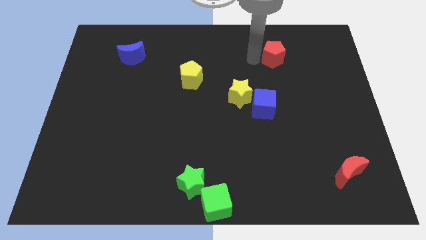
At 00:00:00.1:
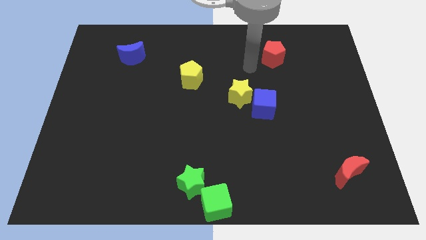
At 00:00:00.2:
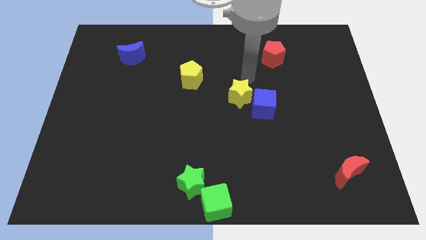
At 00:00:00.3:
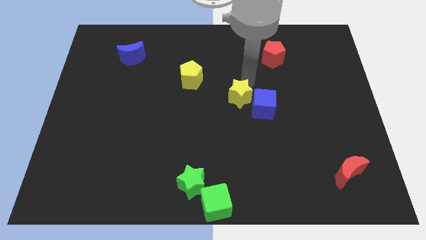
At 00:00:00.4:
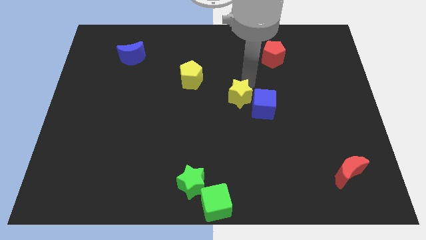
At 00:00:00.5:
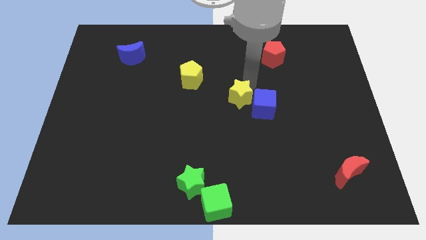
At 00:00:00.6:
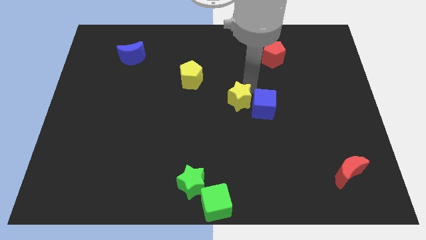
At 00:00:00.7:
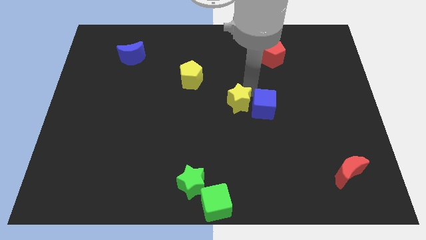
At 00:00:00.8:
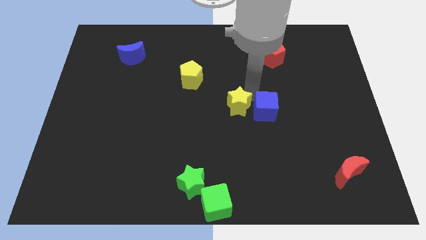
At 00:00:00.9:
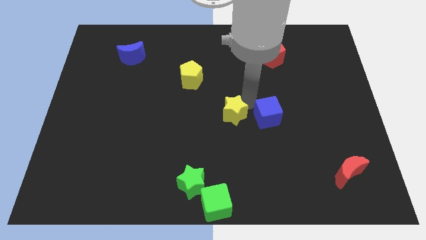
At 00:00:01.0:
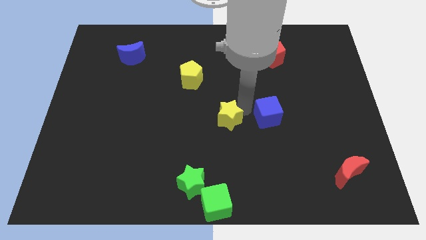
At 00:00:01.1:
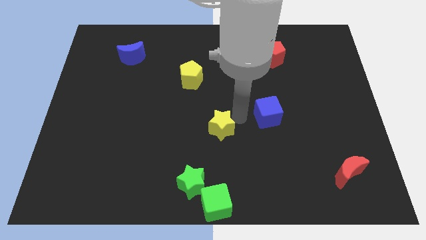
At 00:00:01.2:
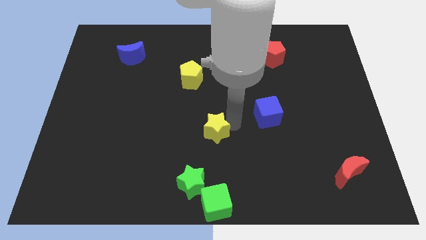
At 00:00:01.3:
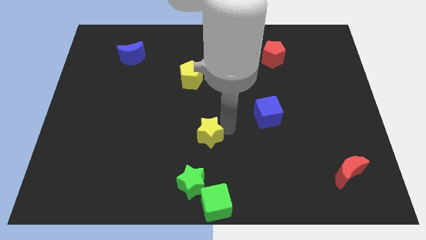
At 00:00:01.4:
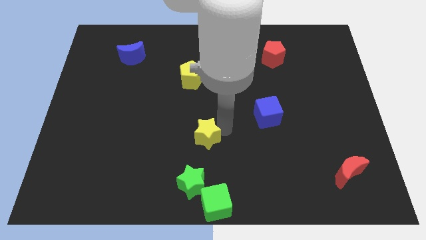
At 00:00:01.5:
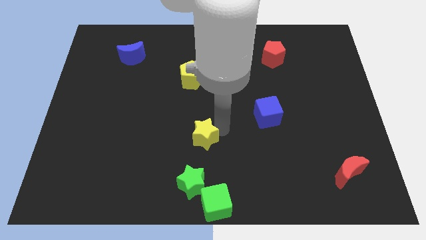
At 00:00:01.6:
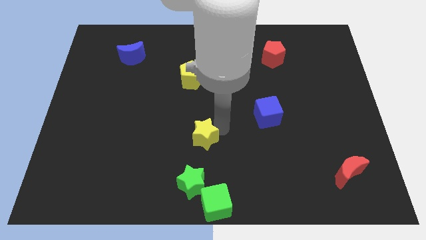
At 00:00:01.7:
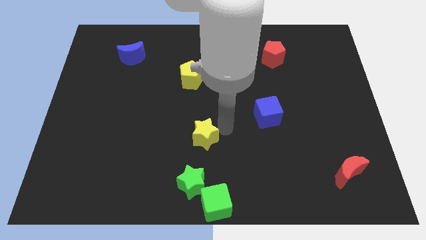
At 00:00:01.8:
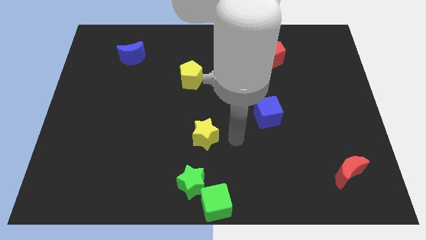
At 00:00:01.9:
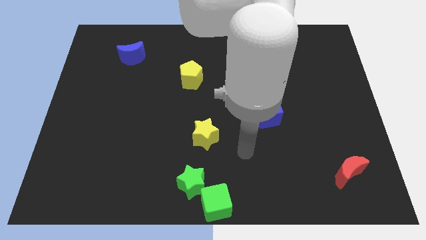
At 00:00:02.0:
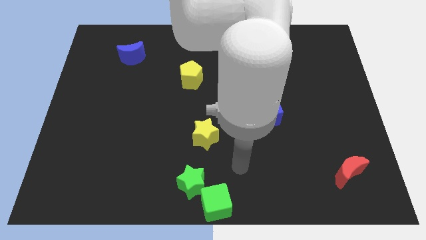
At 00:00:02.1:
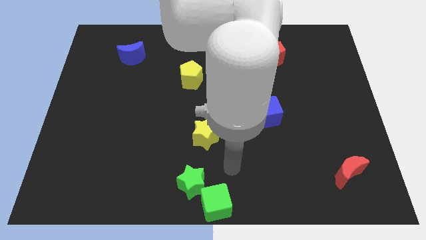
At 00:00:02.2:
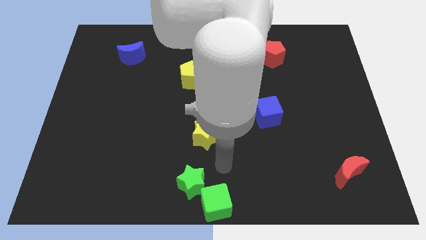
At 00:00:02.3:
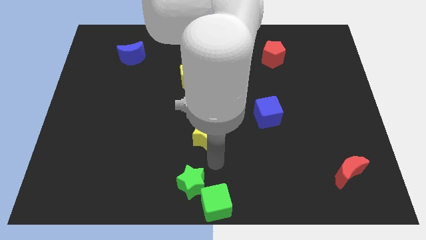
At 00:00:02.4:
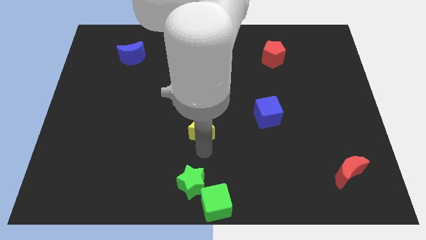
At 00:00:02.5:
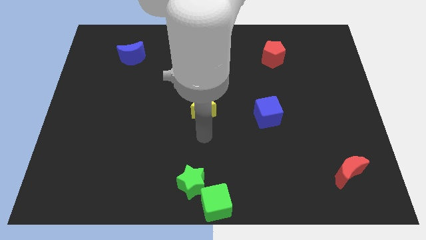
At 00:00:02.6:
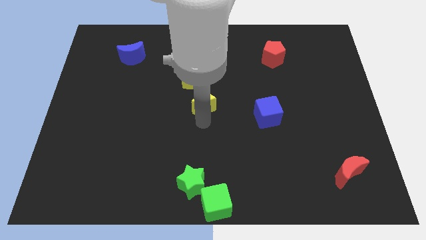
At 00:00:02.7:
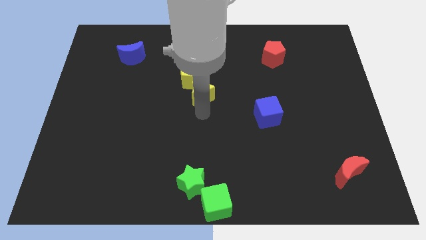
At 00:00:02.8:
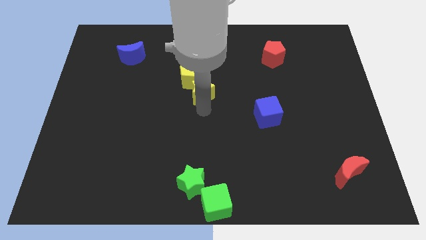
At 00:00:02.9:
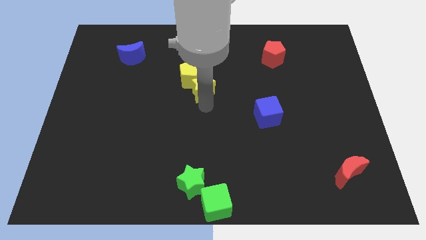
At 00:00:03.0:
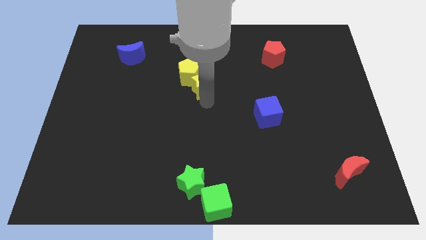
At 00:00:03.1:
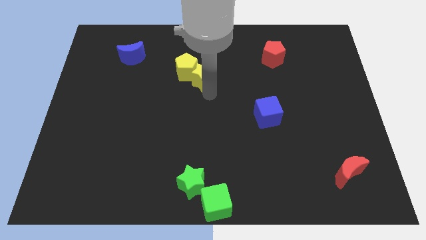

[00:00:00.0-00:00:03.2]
push the yellow star to the bottom right of the yellow pentagon

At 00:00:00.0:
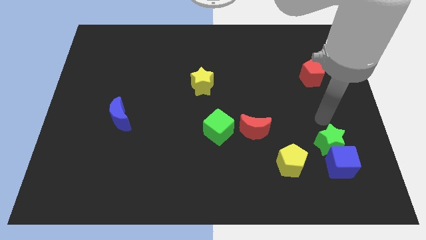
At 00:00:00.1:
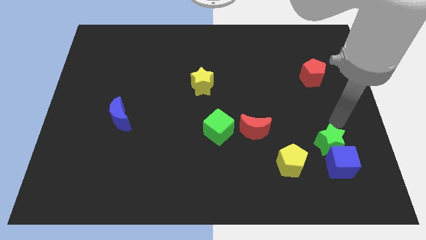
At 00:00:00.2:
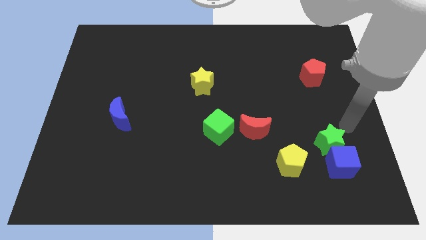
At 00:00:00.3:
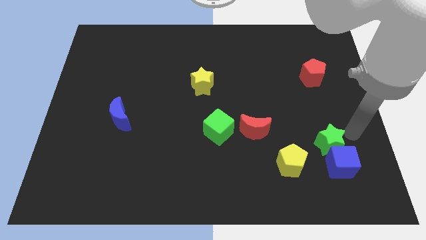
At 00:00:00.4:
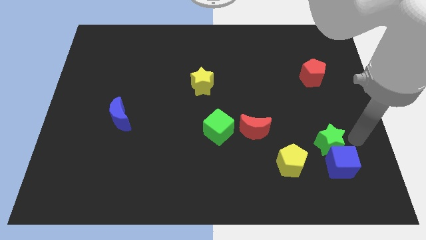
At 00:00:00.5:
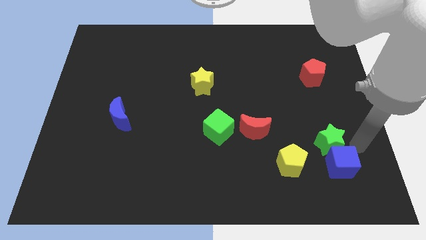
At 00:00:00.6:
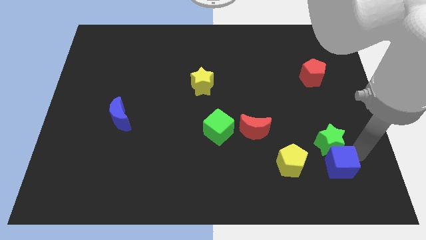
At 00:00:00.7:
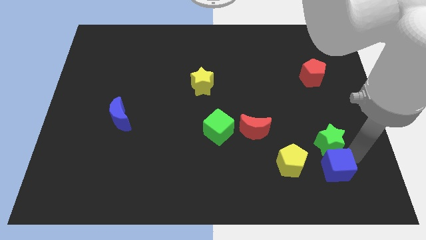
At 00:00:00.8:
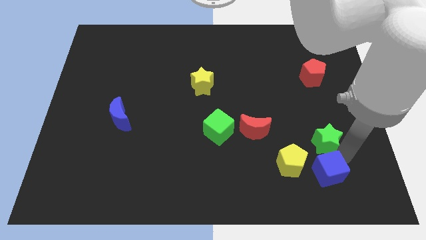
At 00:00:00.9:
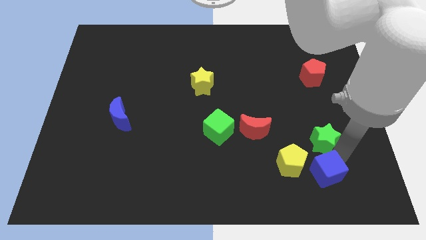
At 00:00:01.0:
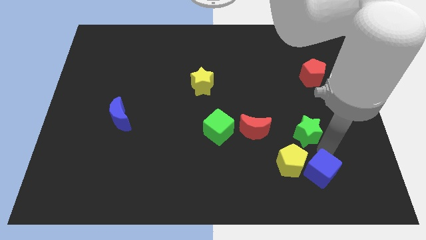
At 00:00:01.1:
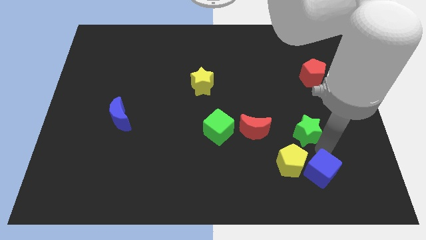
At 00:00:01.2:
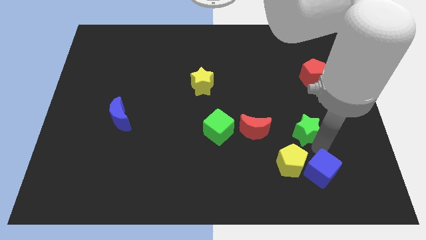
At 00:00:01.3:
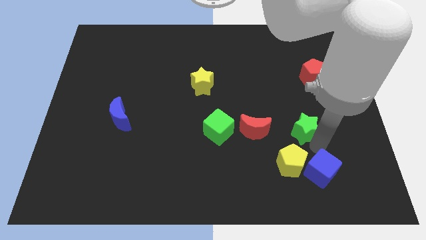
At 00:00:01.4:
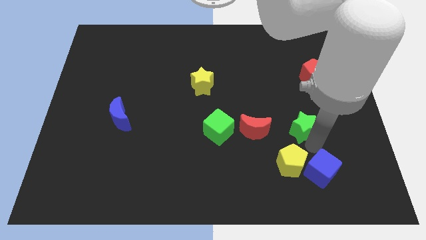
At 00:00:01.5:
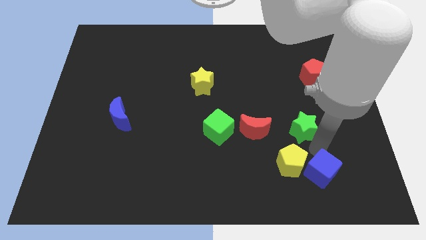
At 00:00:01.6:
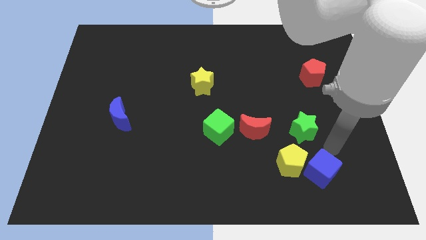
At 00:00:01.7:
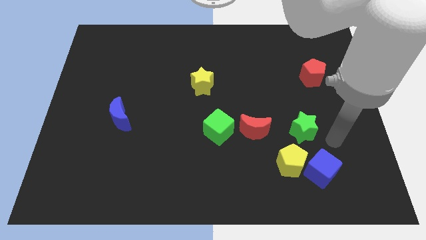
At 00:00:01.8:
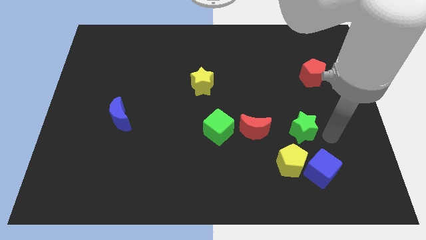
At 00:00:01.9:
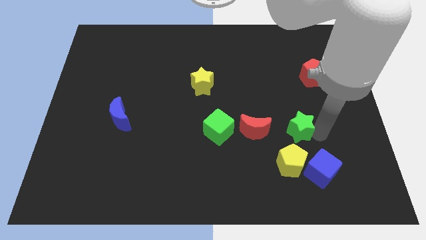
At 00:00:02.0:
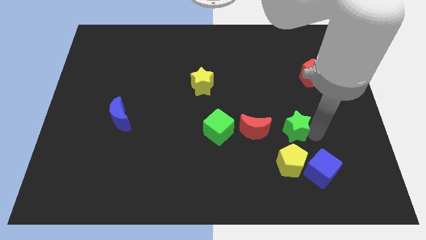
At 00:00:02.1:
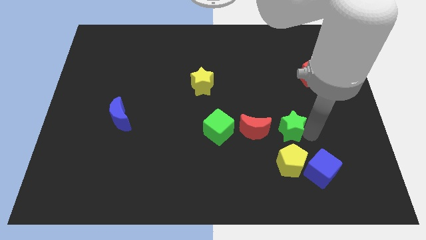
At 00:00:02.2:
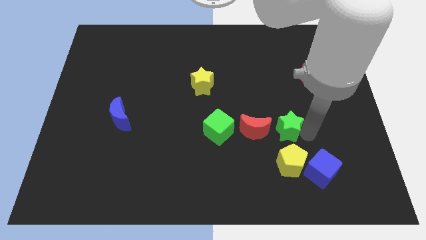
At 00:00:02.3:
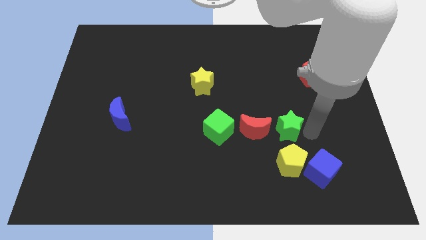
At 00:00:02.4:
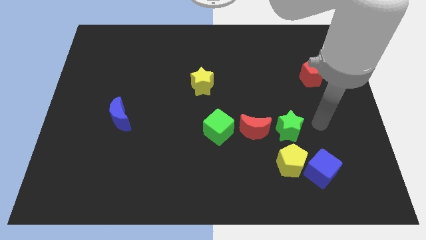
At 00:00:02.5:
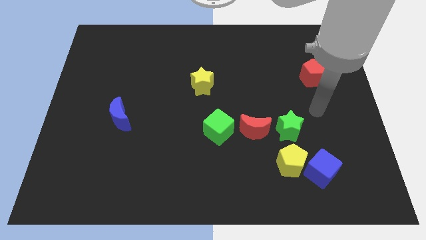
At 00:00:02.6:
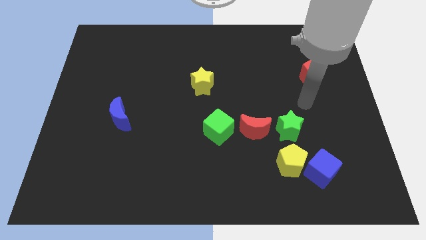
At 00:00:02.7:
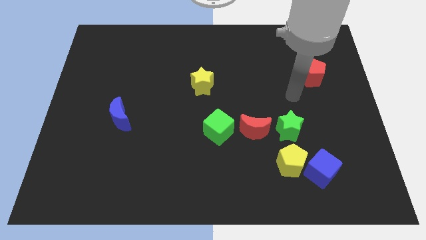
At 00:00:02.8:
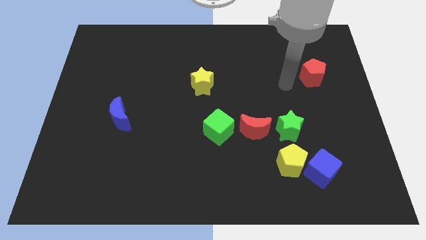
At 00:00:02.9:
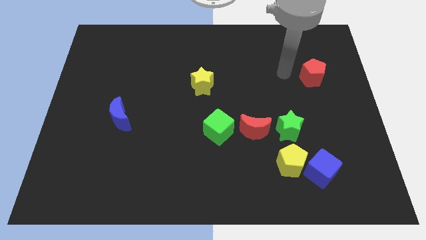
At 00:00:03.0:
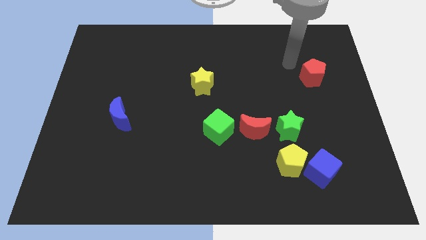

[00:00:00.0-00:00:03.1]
push green star to the right of red moon

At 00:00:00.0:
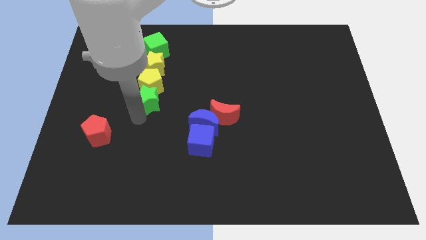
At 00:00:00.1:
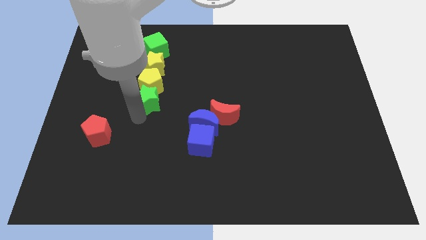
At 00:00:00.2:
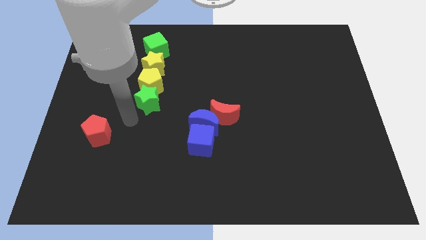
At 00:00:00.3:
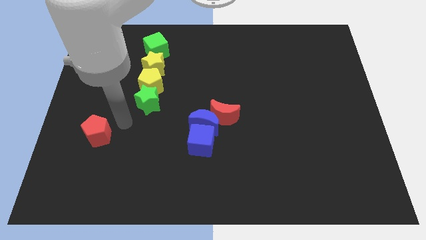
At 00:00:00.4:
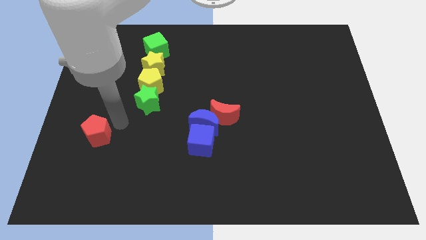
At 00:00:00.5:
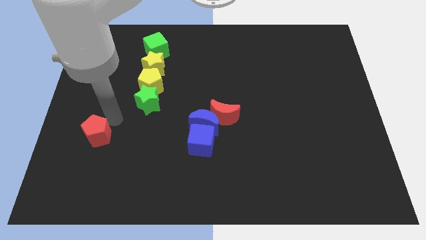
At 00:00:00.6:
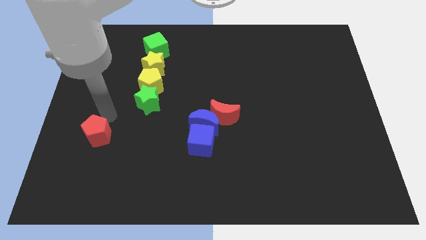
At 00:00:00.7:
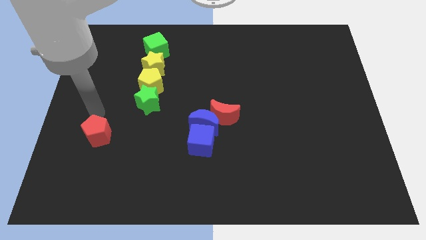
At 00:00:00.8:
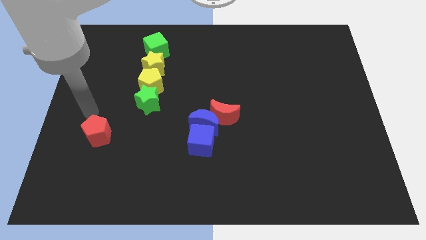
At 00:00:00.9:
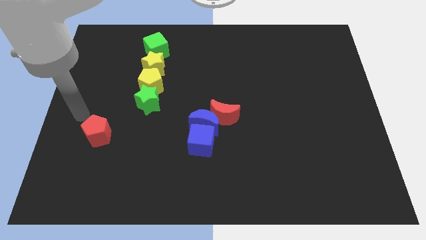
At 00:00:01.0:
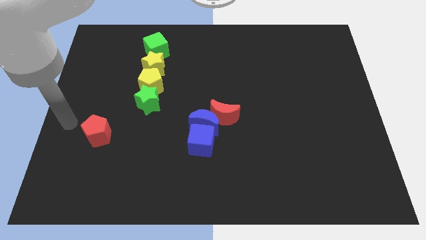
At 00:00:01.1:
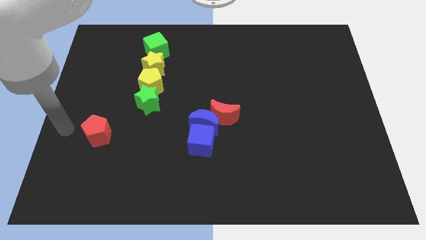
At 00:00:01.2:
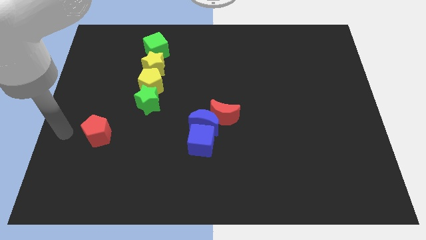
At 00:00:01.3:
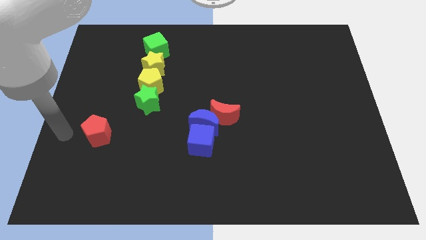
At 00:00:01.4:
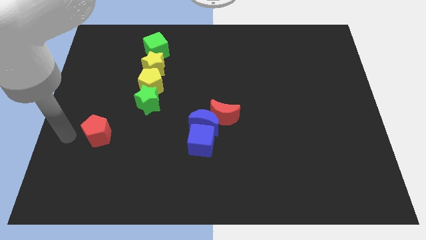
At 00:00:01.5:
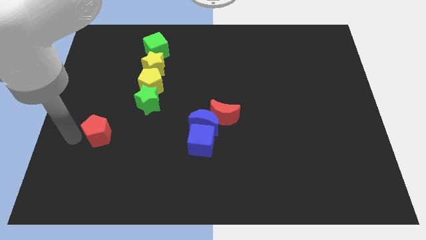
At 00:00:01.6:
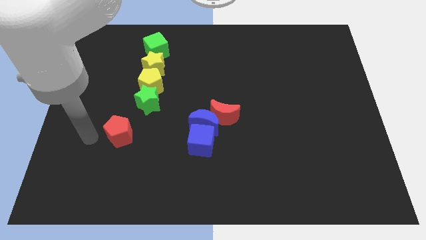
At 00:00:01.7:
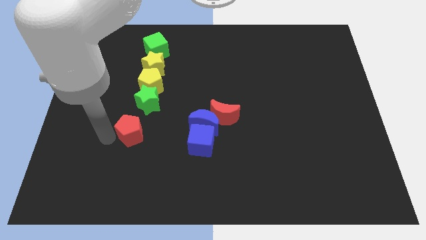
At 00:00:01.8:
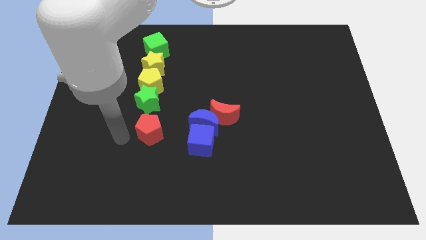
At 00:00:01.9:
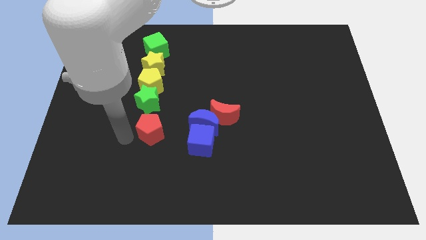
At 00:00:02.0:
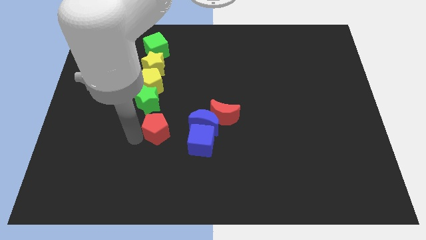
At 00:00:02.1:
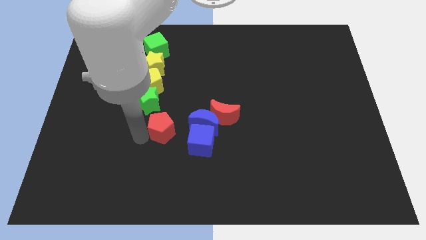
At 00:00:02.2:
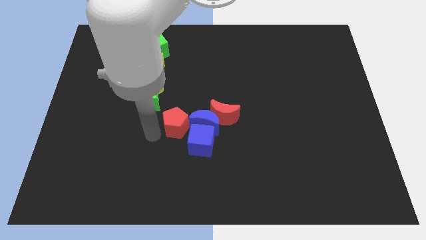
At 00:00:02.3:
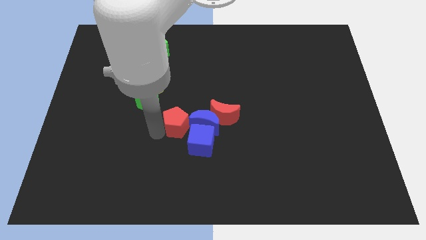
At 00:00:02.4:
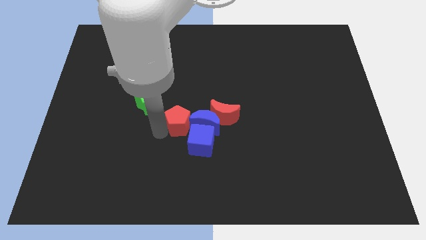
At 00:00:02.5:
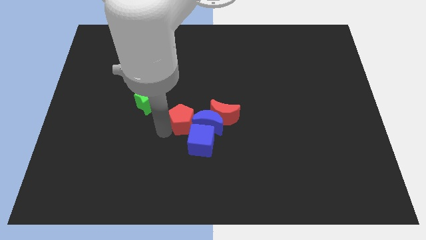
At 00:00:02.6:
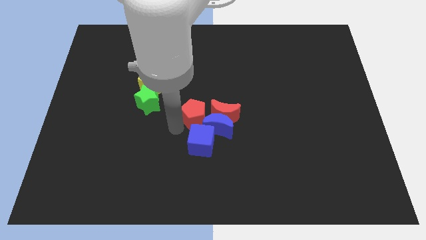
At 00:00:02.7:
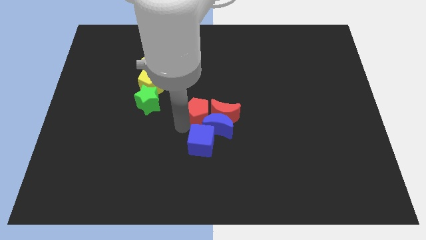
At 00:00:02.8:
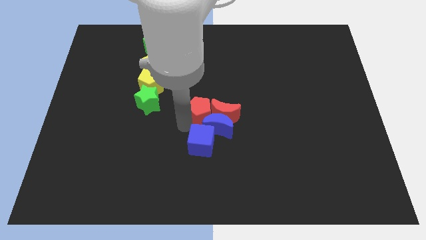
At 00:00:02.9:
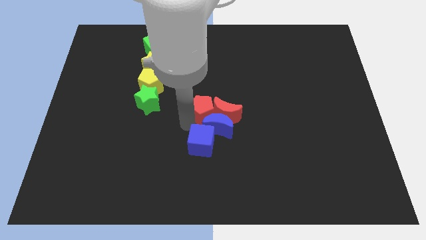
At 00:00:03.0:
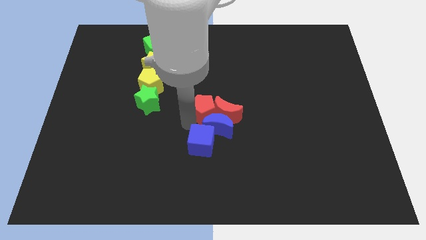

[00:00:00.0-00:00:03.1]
drag the red pentagon into the group of blocks
